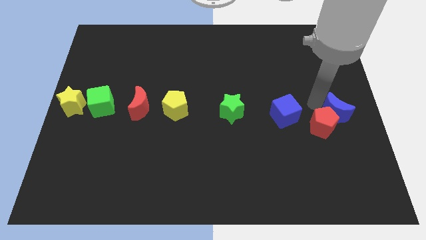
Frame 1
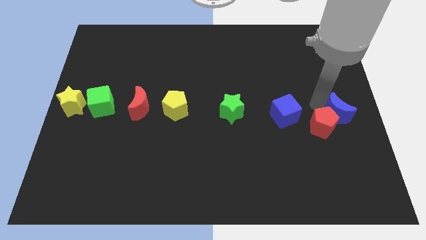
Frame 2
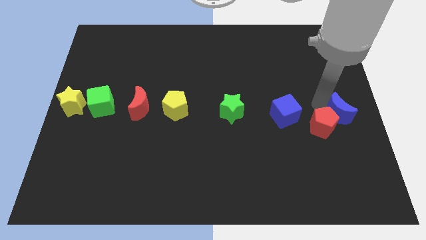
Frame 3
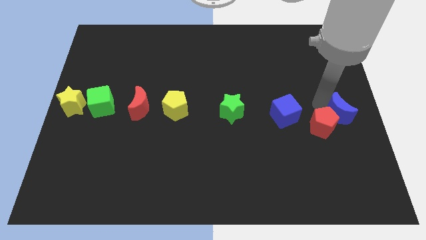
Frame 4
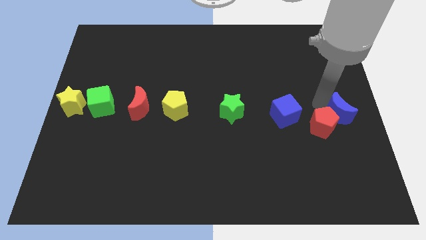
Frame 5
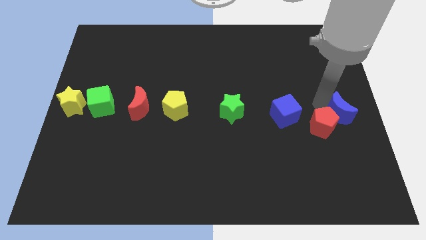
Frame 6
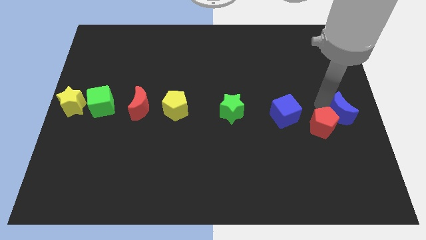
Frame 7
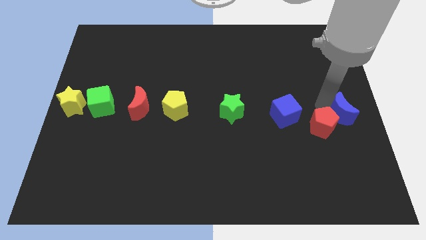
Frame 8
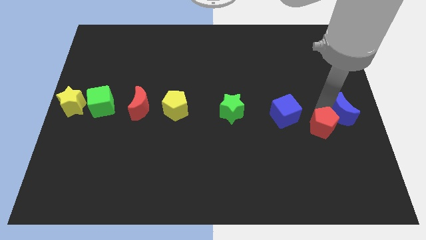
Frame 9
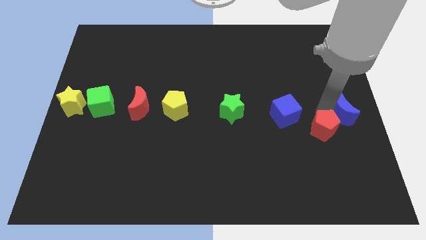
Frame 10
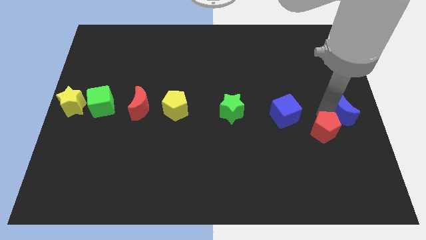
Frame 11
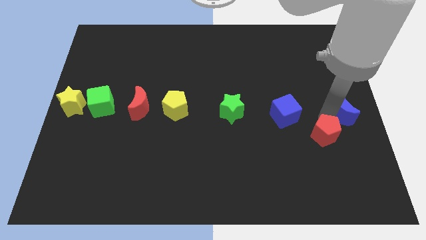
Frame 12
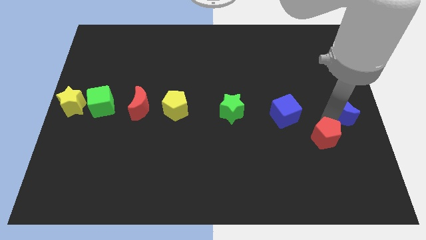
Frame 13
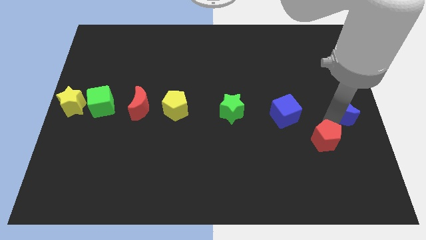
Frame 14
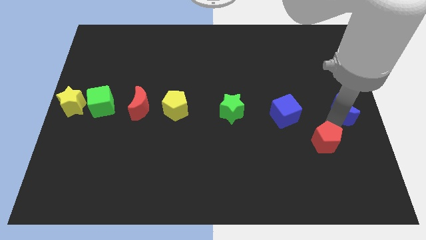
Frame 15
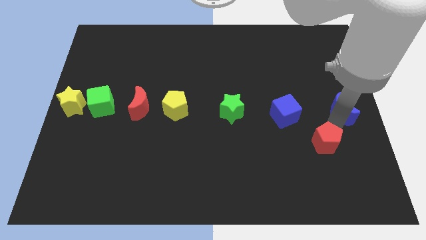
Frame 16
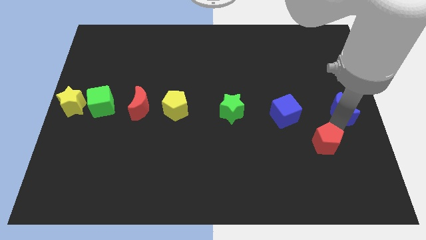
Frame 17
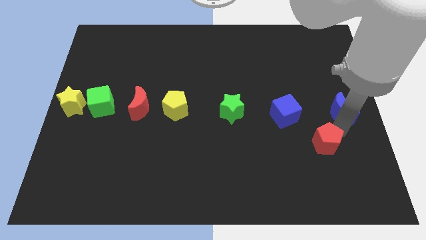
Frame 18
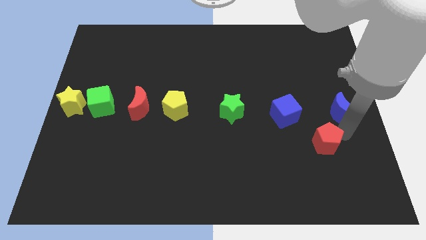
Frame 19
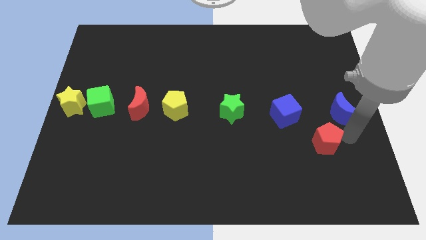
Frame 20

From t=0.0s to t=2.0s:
separate the red pentagon from the blue crescent

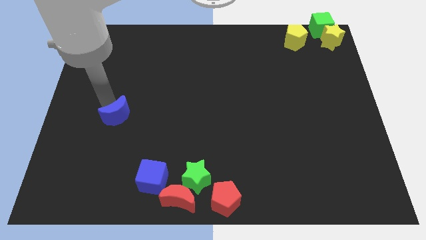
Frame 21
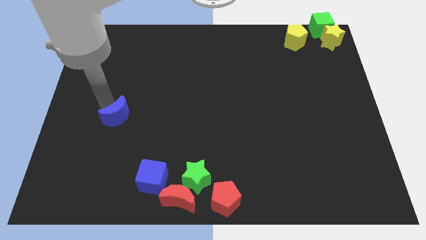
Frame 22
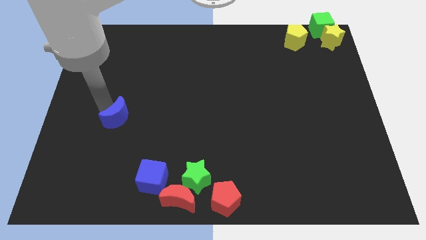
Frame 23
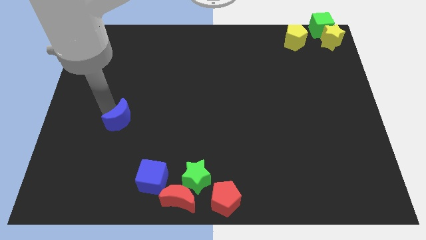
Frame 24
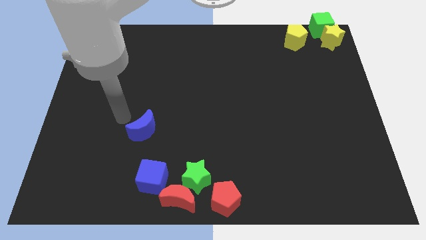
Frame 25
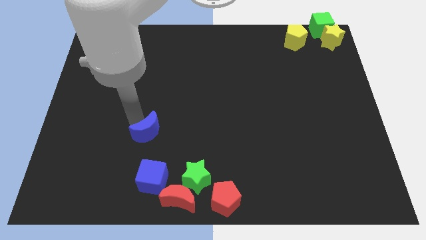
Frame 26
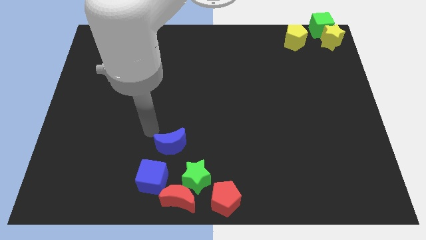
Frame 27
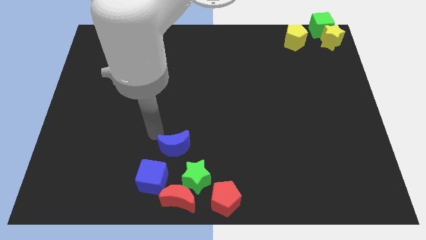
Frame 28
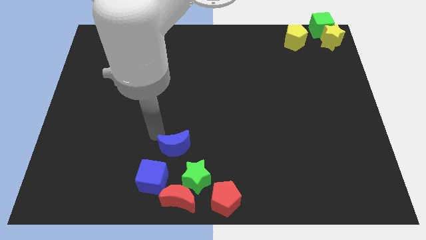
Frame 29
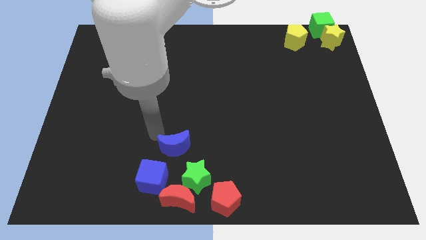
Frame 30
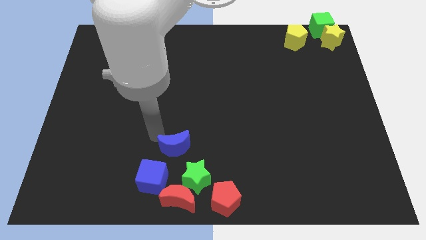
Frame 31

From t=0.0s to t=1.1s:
move blue crescent towards the green star

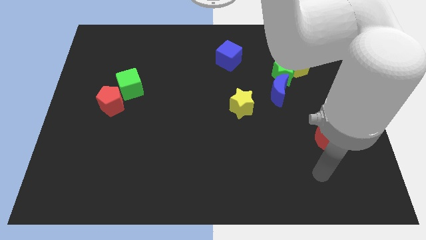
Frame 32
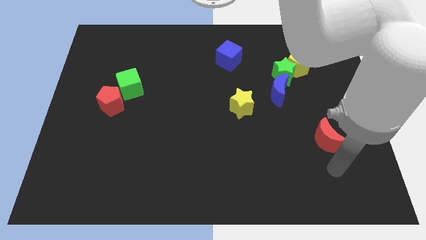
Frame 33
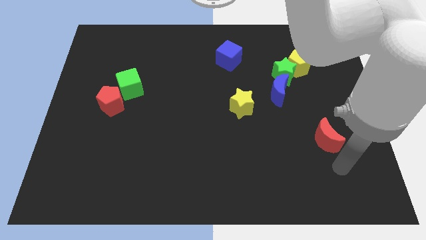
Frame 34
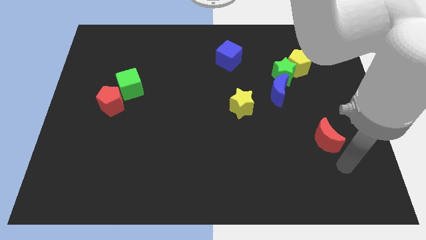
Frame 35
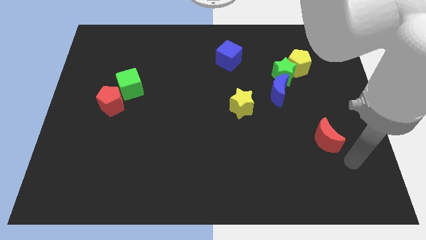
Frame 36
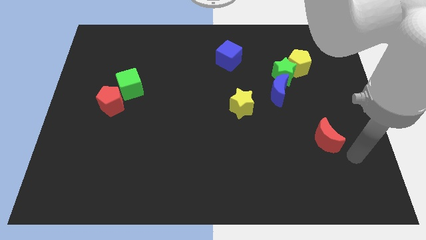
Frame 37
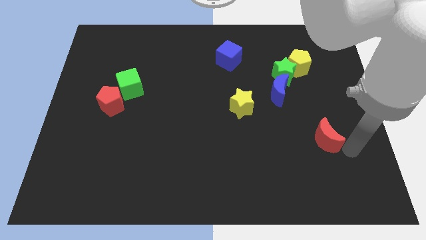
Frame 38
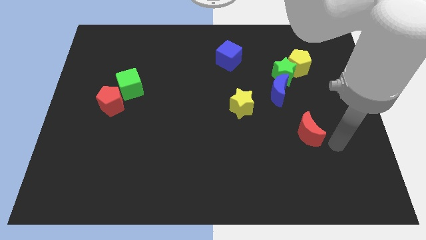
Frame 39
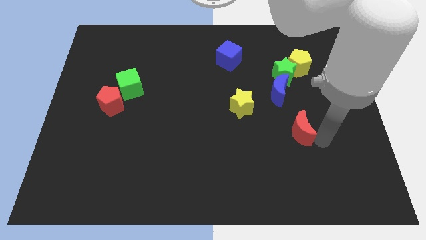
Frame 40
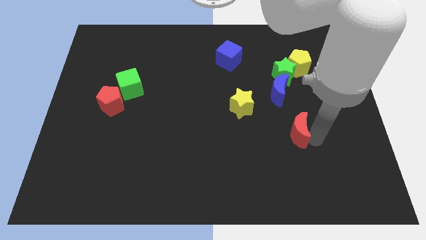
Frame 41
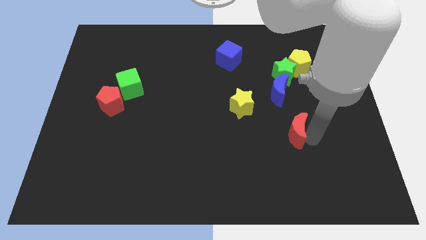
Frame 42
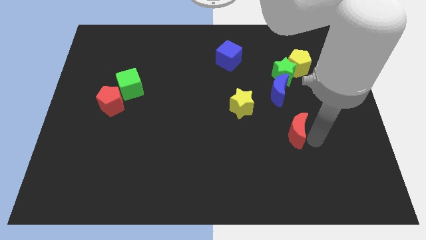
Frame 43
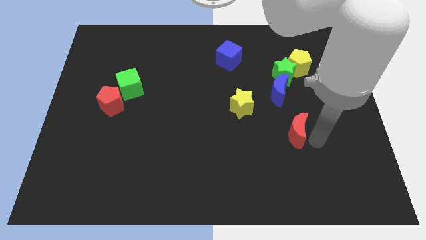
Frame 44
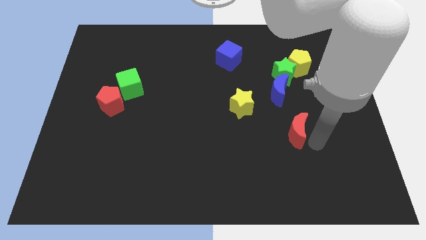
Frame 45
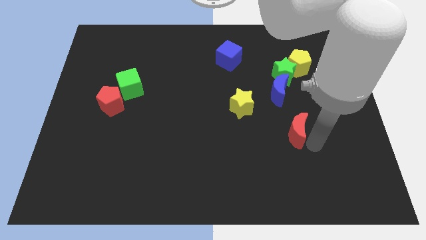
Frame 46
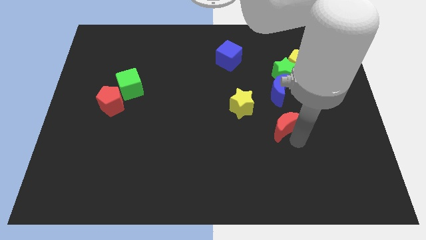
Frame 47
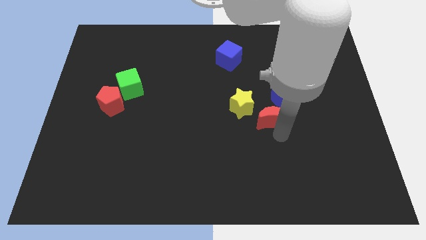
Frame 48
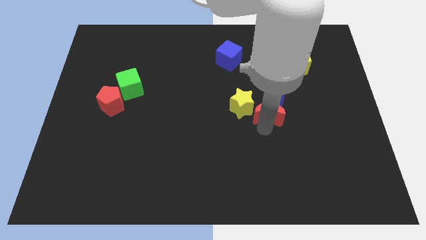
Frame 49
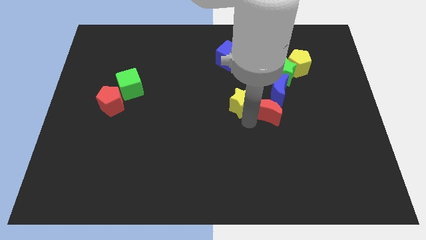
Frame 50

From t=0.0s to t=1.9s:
push the red moon close to the yellow star

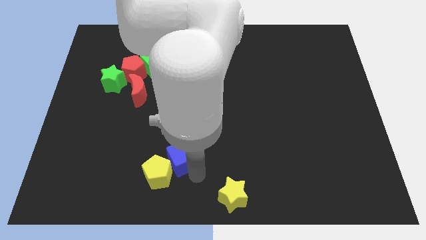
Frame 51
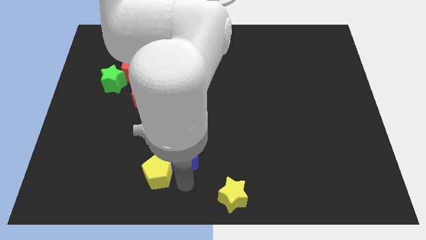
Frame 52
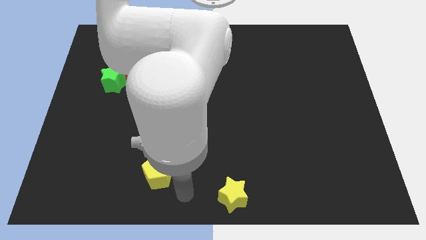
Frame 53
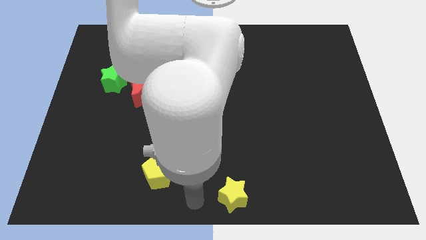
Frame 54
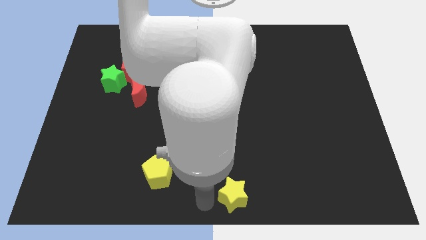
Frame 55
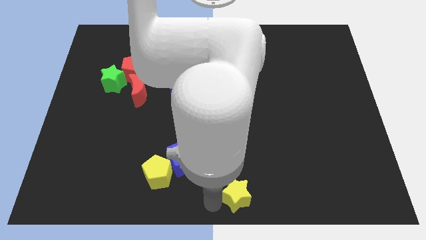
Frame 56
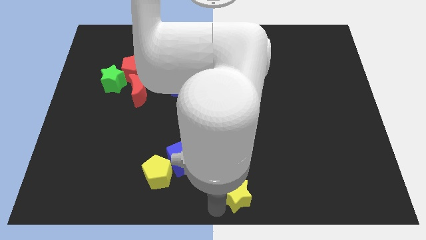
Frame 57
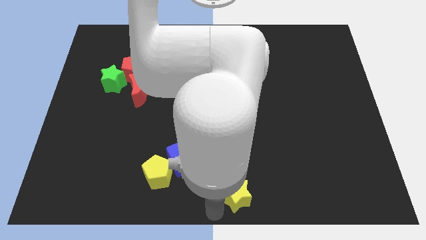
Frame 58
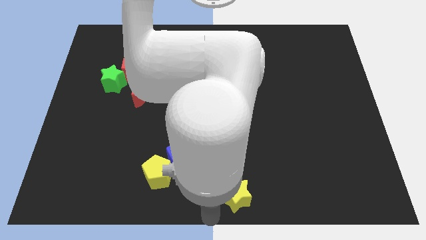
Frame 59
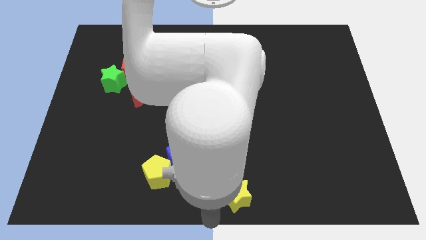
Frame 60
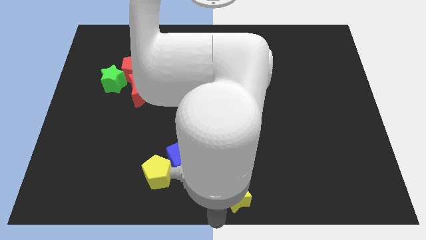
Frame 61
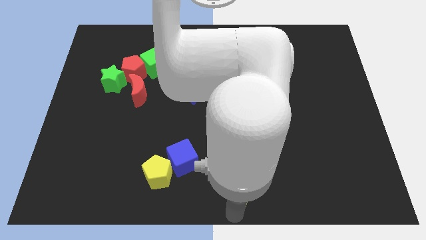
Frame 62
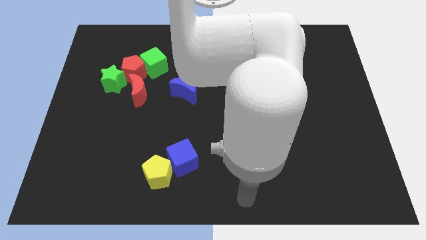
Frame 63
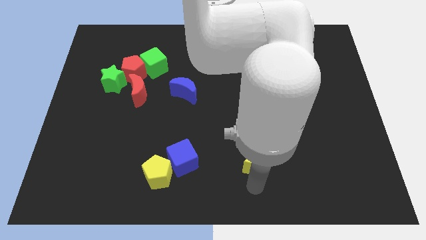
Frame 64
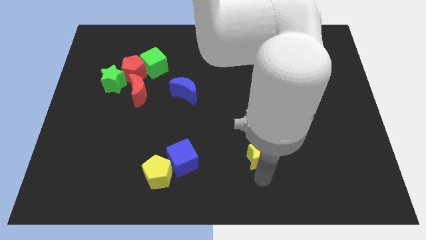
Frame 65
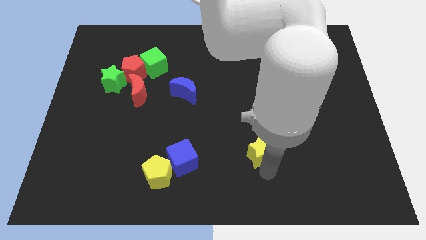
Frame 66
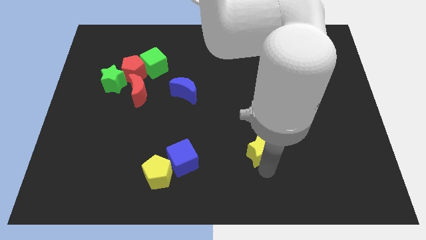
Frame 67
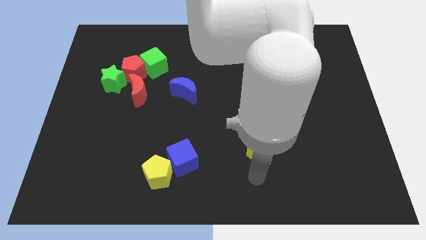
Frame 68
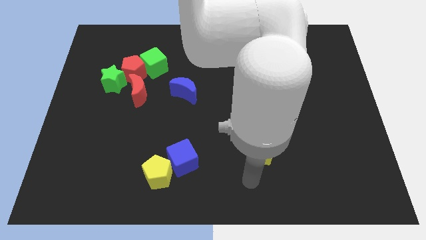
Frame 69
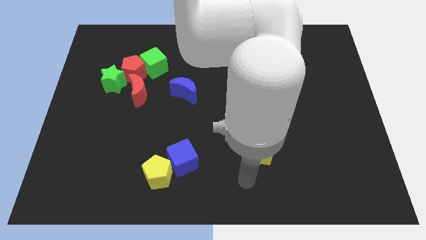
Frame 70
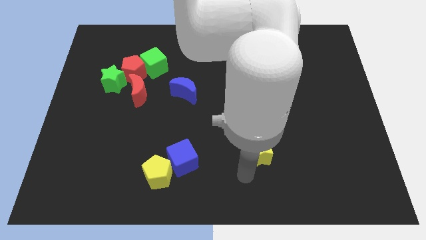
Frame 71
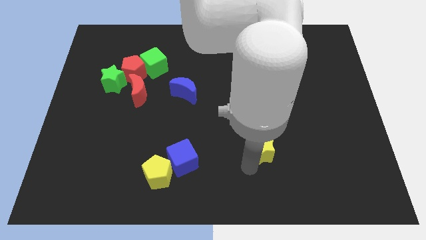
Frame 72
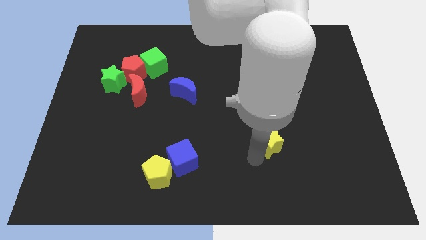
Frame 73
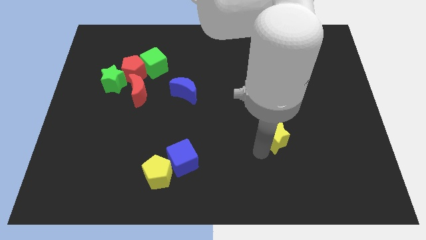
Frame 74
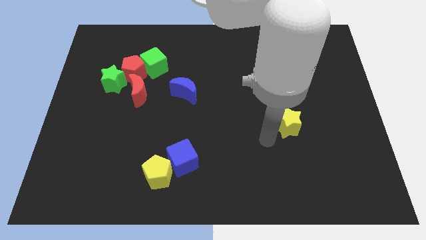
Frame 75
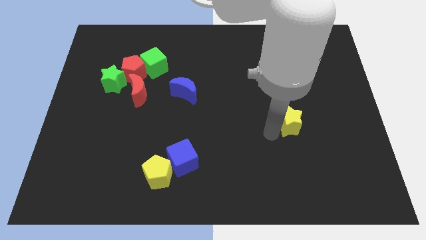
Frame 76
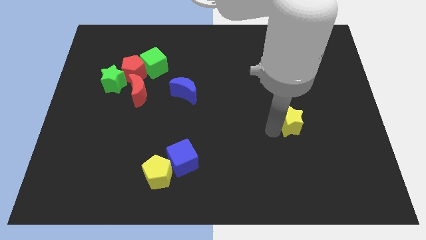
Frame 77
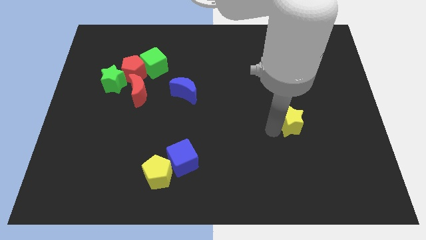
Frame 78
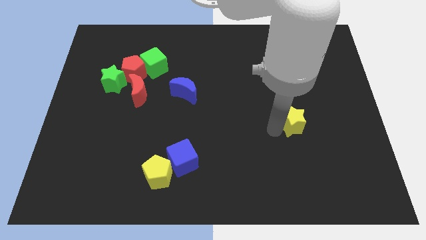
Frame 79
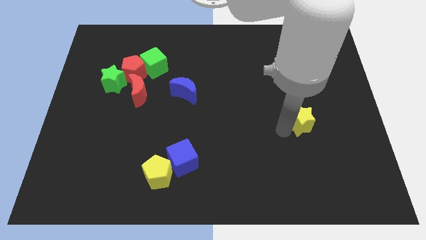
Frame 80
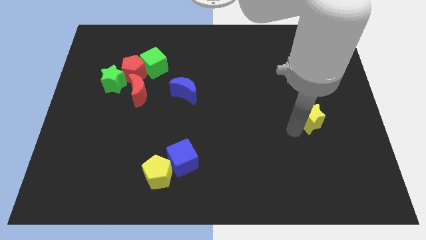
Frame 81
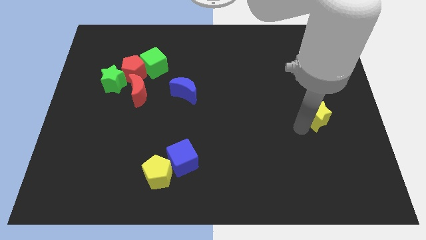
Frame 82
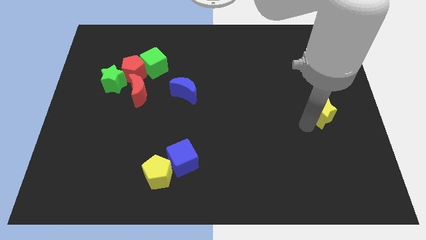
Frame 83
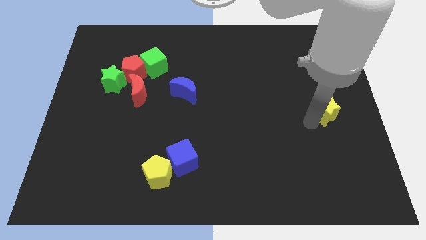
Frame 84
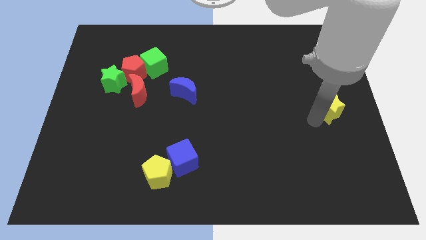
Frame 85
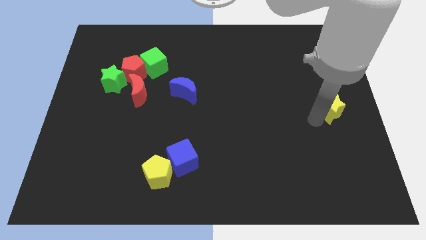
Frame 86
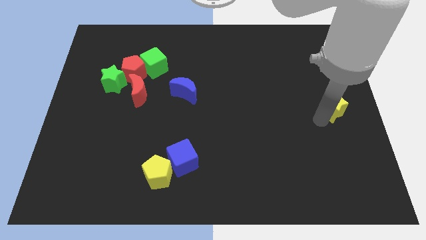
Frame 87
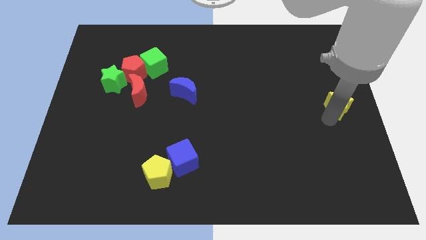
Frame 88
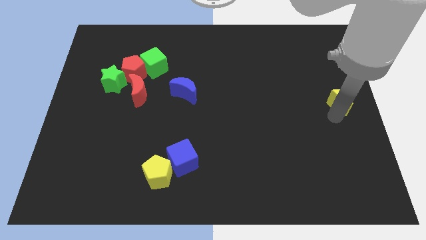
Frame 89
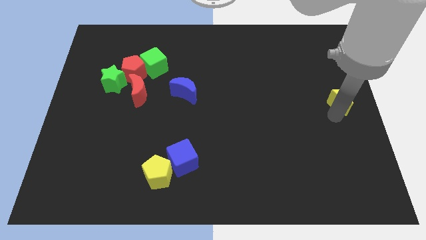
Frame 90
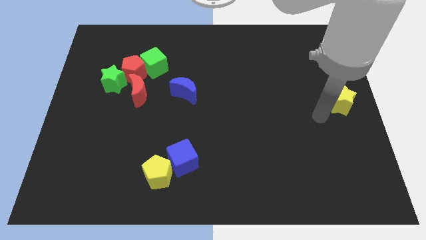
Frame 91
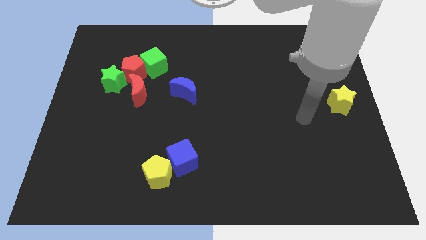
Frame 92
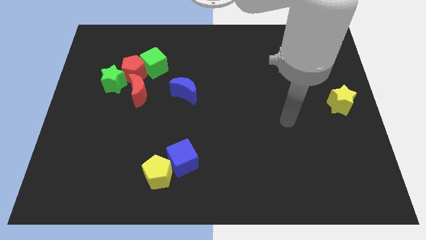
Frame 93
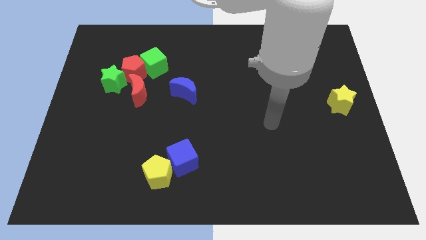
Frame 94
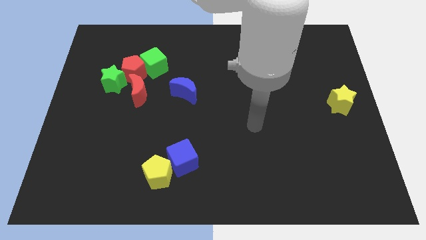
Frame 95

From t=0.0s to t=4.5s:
move the yellow star to the center right side of the board
